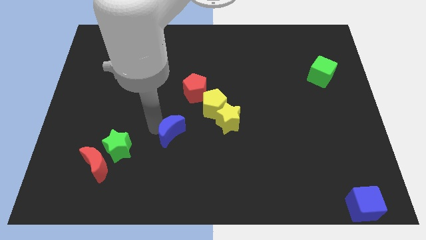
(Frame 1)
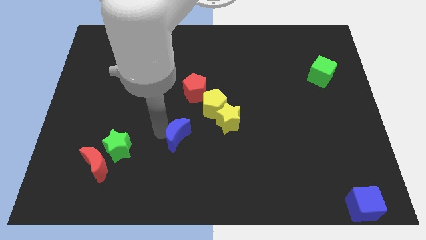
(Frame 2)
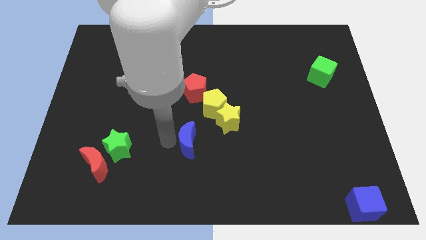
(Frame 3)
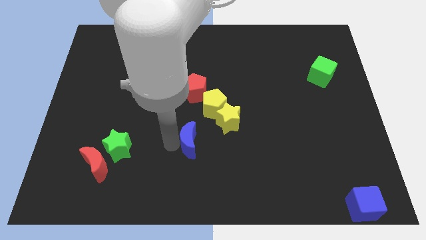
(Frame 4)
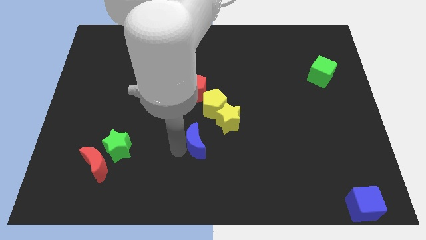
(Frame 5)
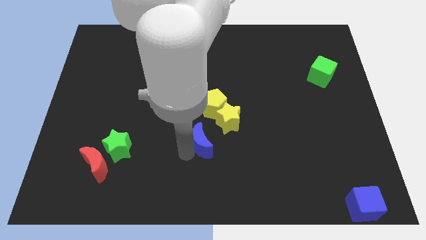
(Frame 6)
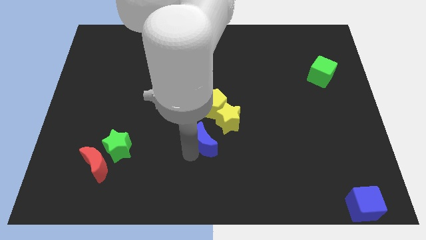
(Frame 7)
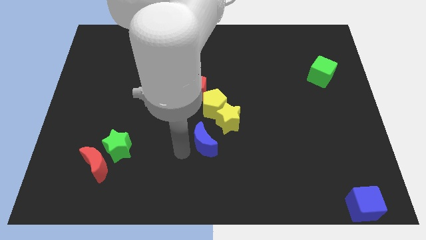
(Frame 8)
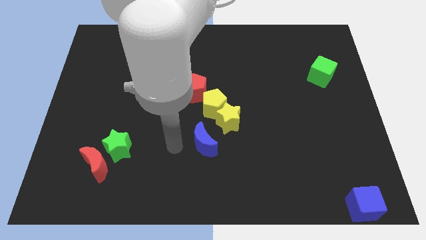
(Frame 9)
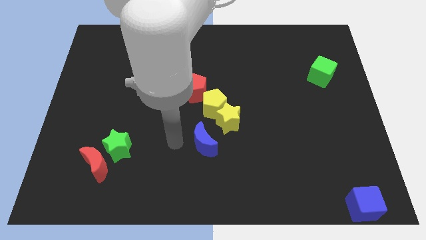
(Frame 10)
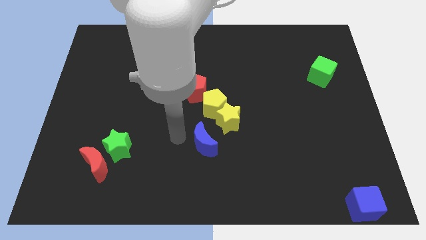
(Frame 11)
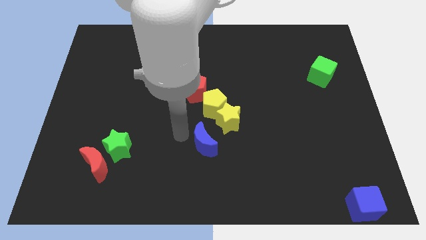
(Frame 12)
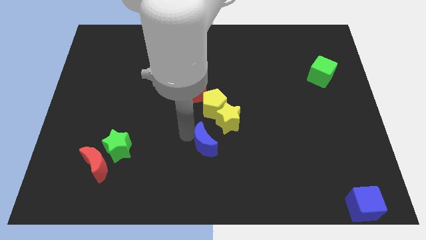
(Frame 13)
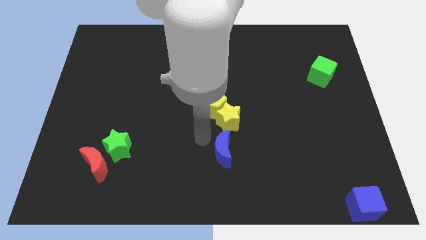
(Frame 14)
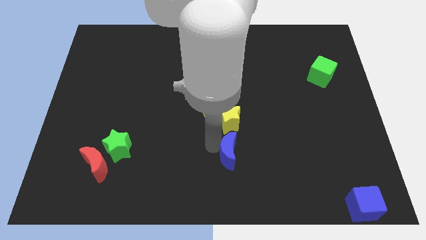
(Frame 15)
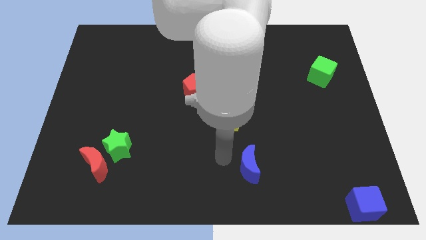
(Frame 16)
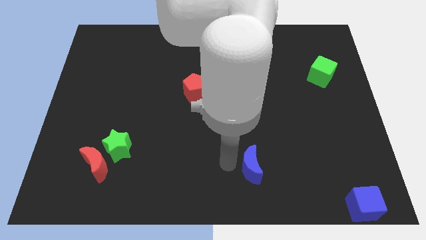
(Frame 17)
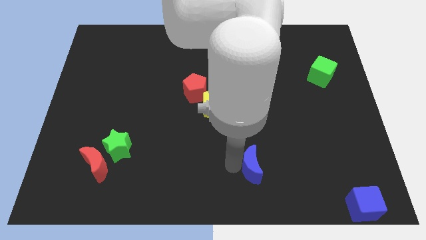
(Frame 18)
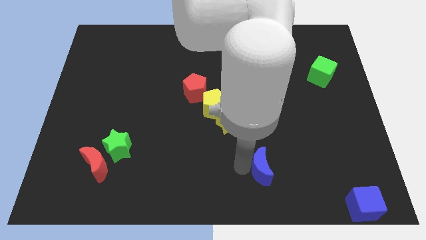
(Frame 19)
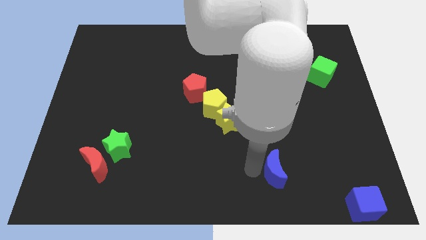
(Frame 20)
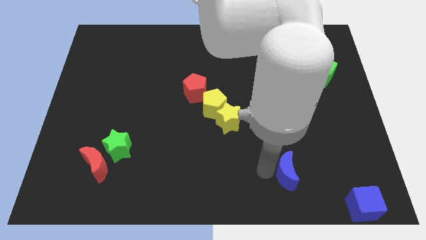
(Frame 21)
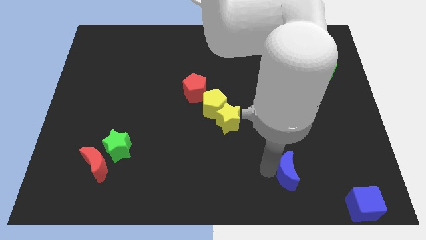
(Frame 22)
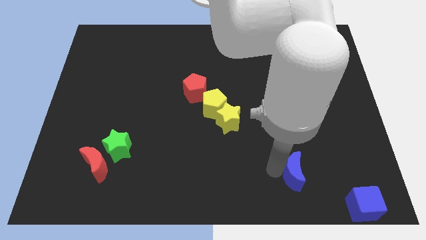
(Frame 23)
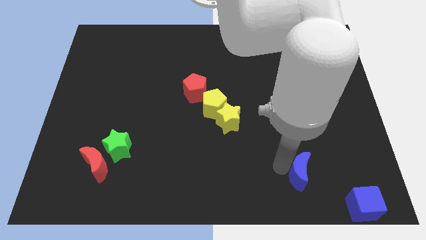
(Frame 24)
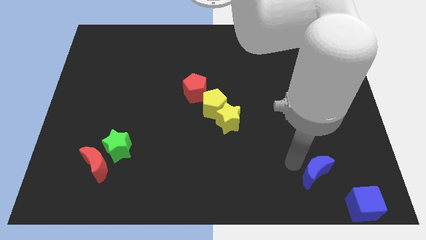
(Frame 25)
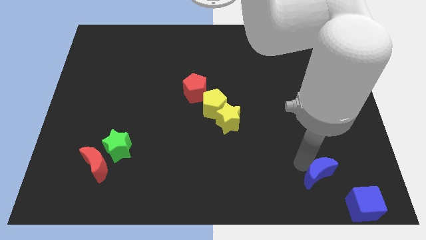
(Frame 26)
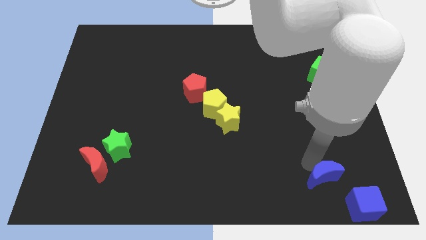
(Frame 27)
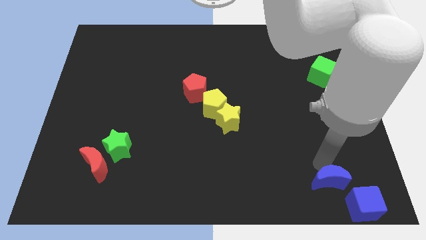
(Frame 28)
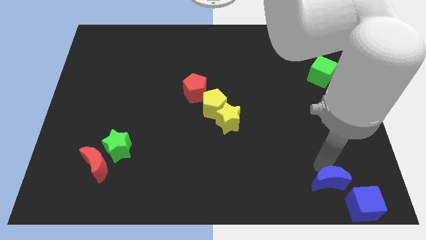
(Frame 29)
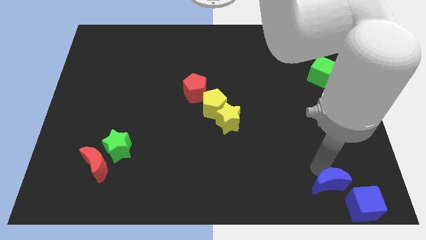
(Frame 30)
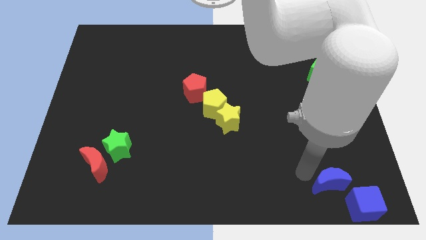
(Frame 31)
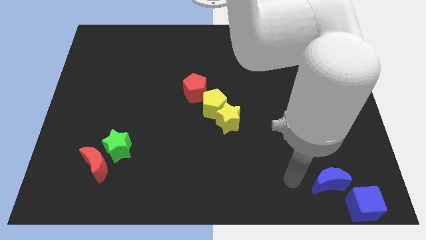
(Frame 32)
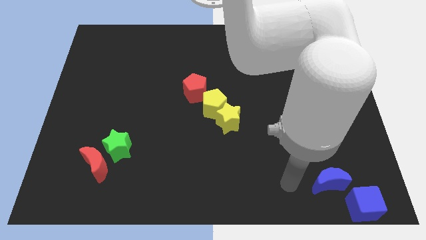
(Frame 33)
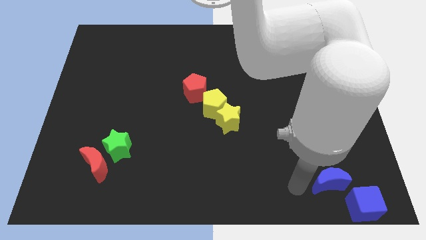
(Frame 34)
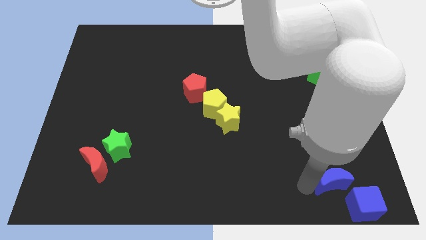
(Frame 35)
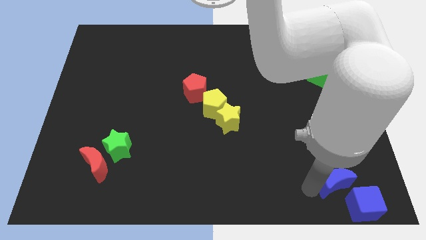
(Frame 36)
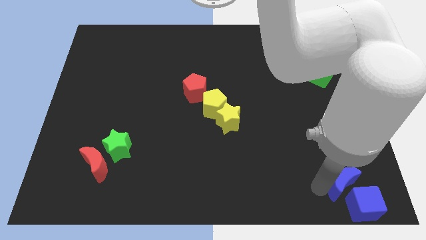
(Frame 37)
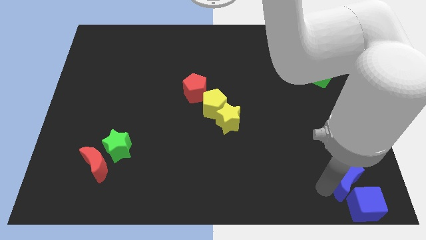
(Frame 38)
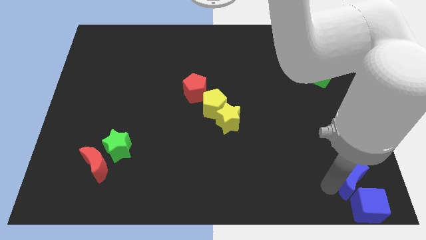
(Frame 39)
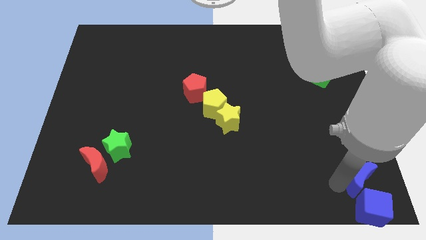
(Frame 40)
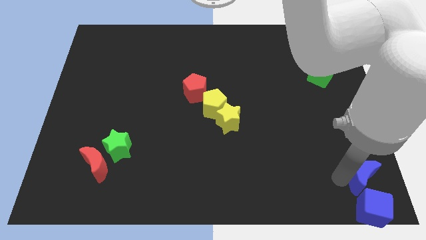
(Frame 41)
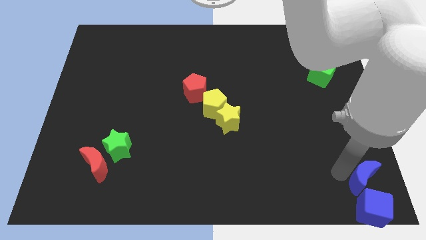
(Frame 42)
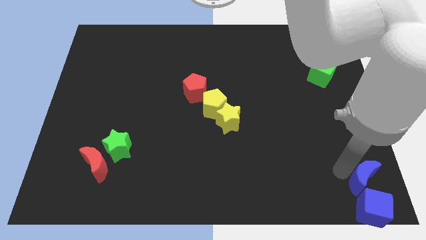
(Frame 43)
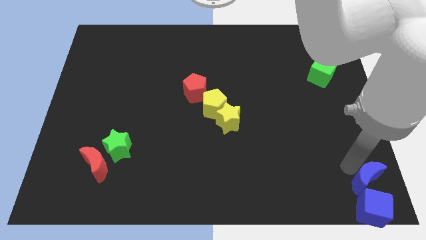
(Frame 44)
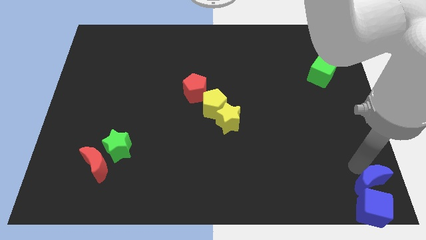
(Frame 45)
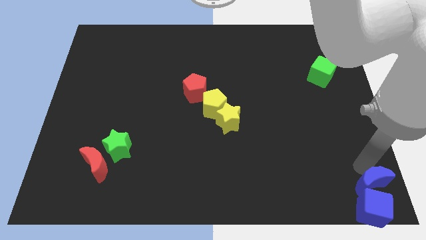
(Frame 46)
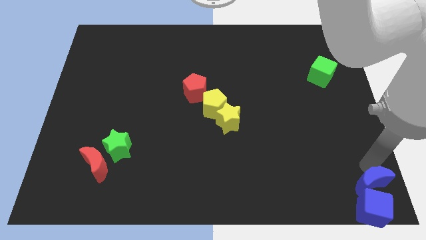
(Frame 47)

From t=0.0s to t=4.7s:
place the blue crescent into top of the blue cube

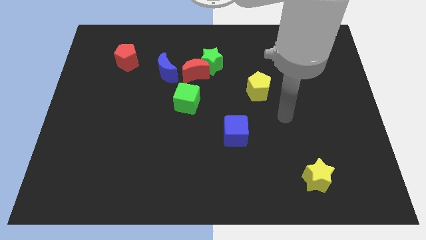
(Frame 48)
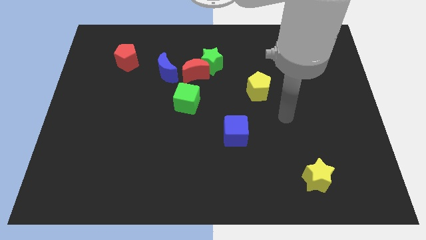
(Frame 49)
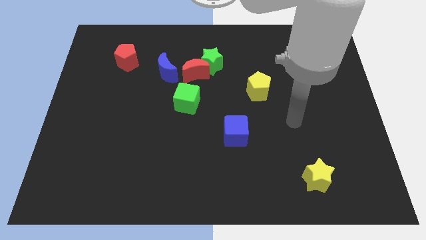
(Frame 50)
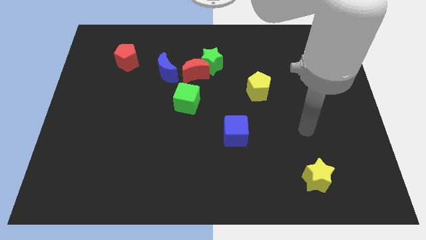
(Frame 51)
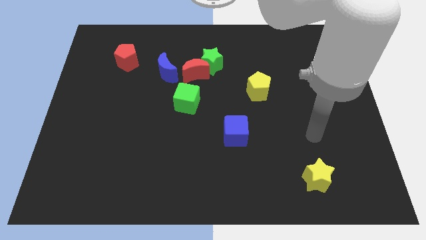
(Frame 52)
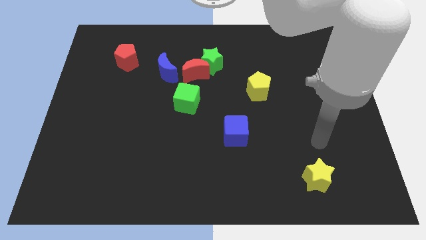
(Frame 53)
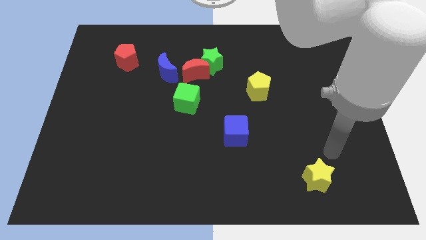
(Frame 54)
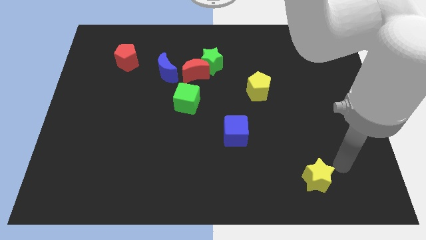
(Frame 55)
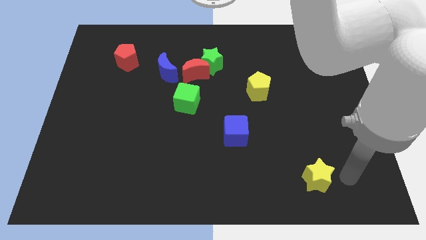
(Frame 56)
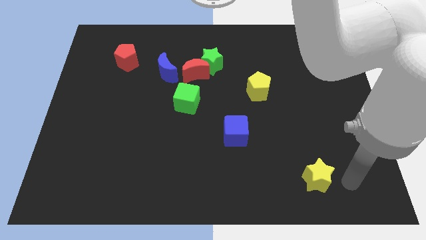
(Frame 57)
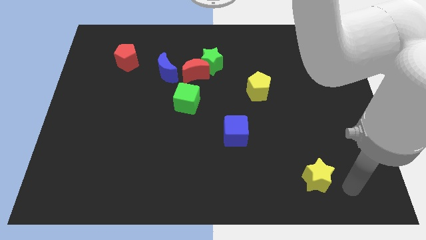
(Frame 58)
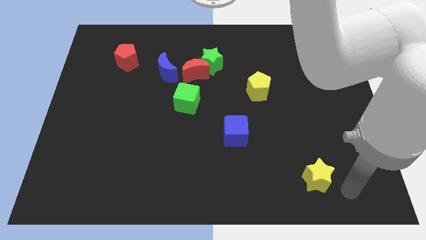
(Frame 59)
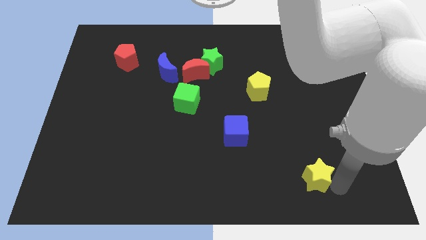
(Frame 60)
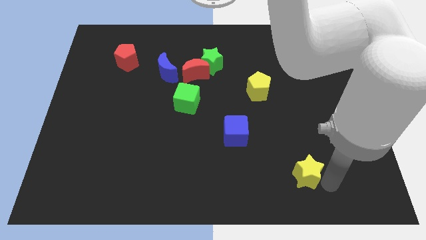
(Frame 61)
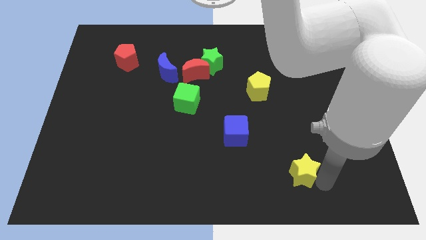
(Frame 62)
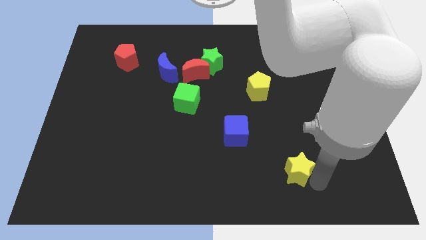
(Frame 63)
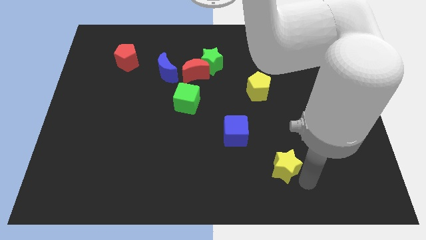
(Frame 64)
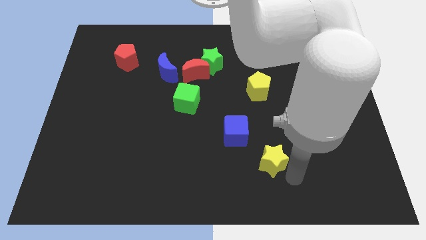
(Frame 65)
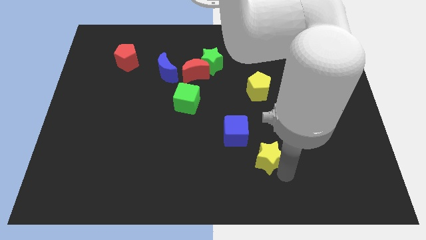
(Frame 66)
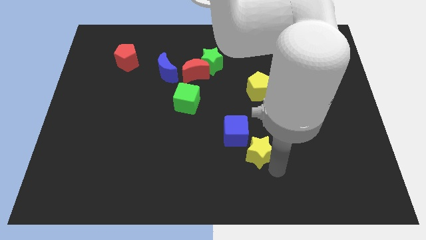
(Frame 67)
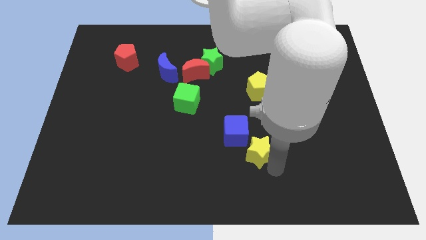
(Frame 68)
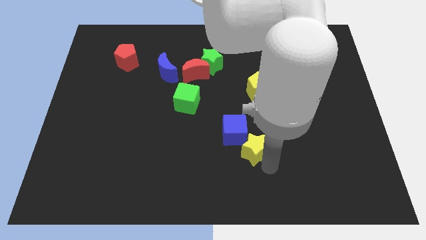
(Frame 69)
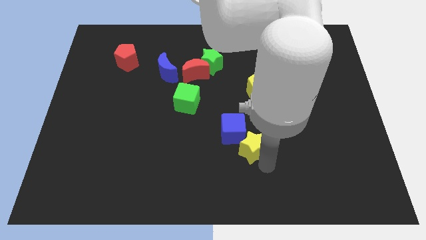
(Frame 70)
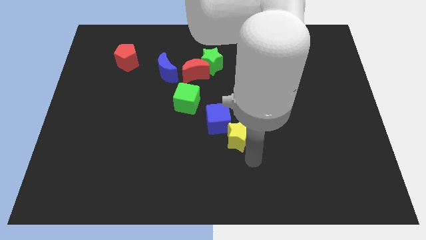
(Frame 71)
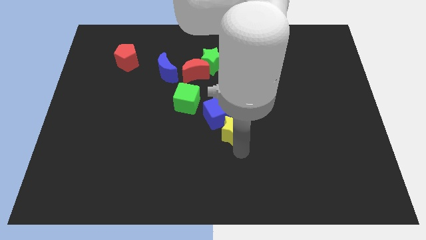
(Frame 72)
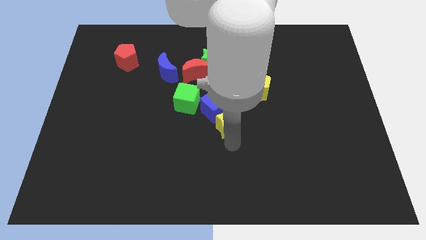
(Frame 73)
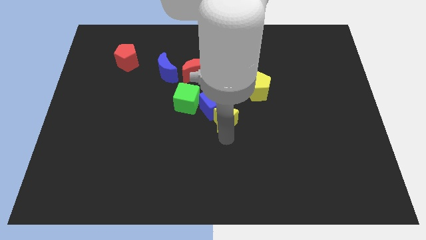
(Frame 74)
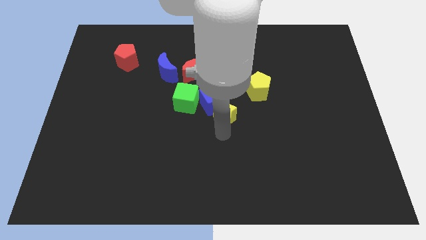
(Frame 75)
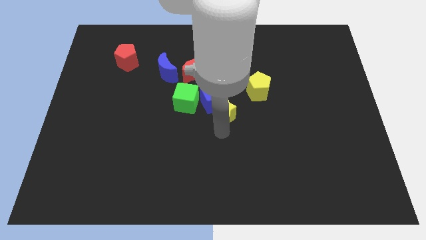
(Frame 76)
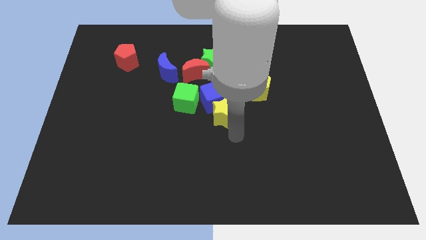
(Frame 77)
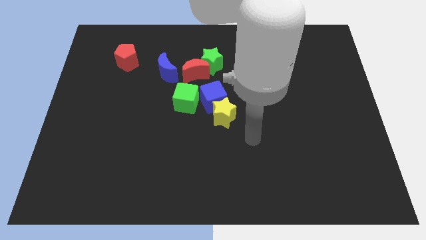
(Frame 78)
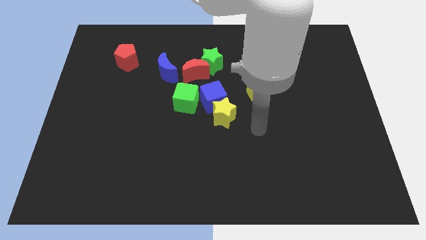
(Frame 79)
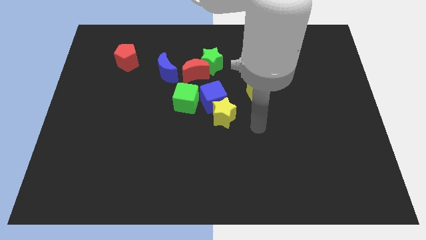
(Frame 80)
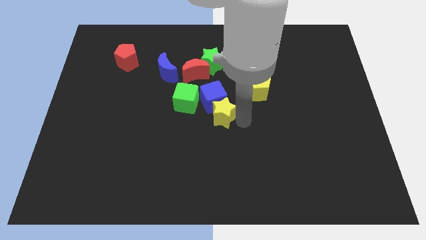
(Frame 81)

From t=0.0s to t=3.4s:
move yellow star into blue cube

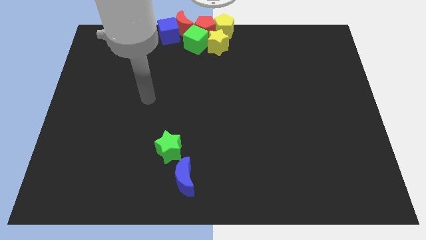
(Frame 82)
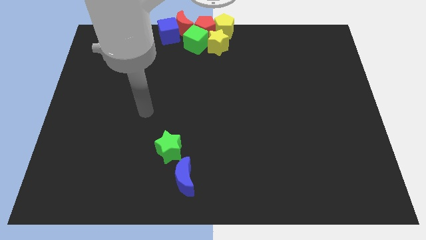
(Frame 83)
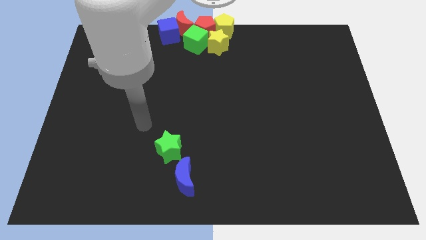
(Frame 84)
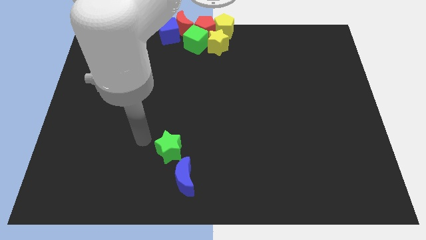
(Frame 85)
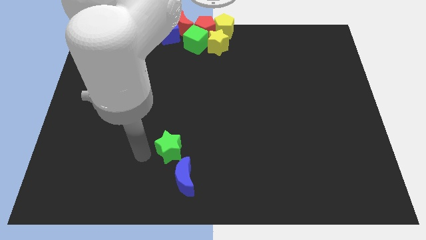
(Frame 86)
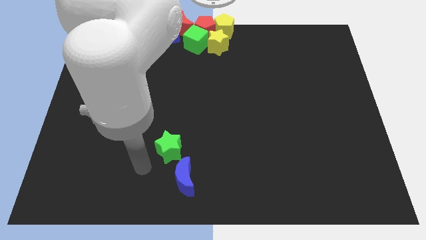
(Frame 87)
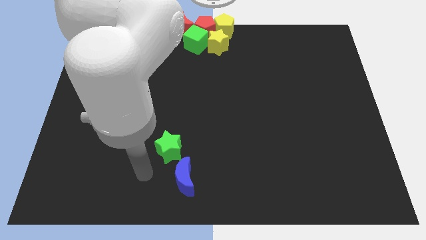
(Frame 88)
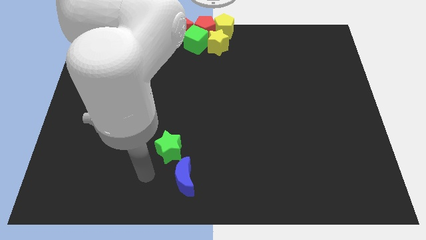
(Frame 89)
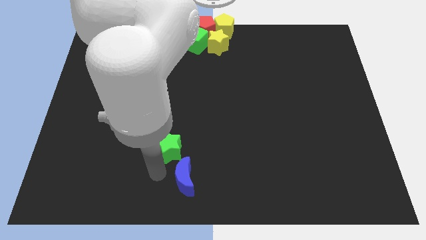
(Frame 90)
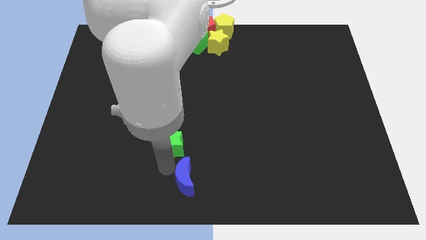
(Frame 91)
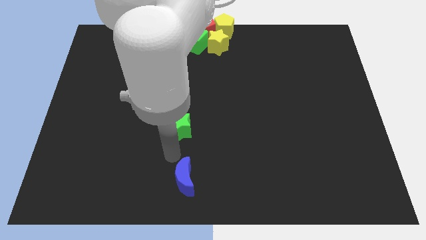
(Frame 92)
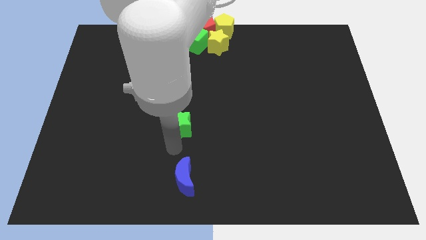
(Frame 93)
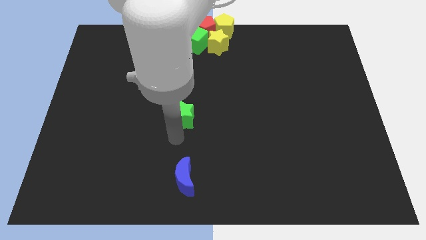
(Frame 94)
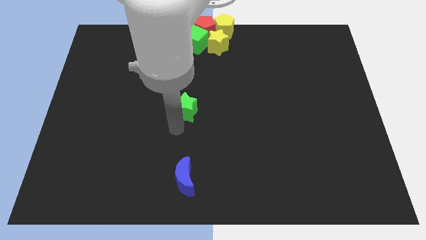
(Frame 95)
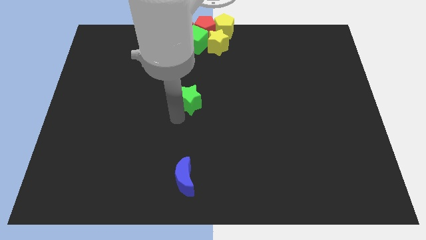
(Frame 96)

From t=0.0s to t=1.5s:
place the green star below the green cube
